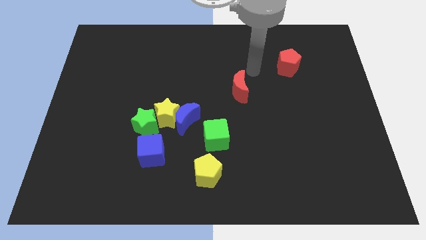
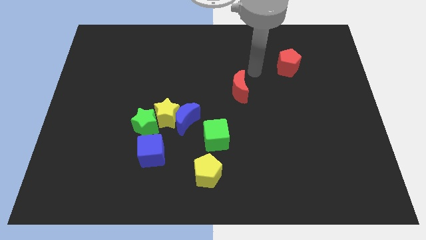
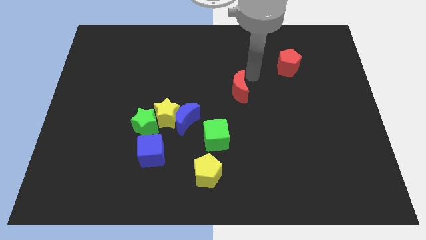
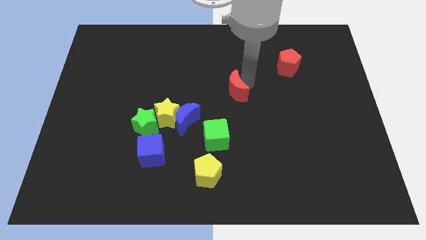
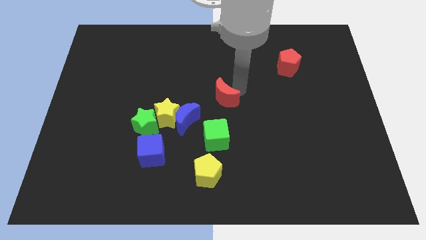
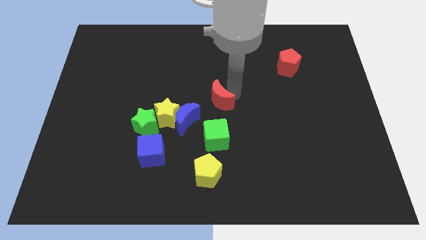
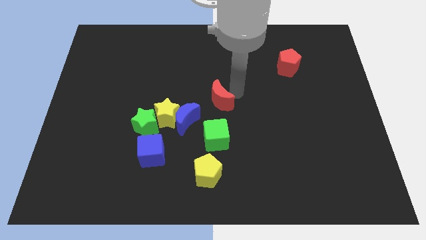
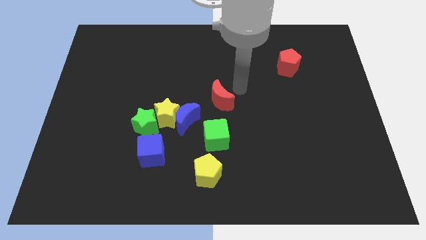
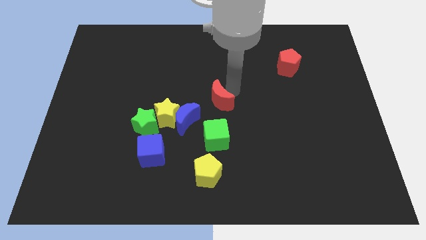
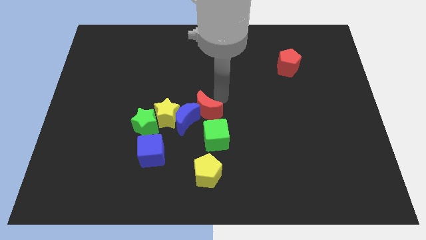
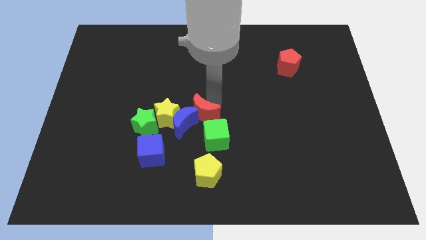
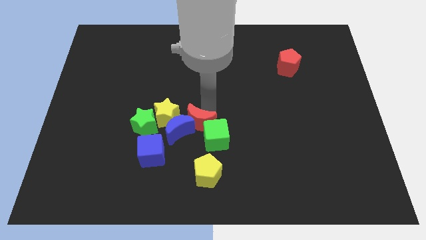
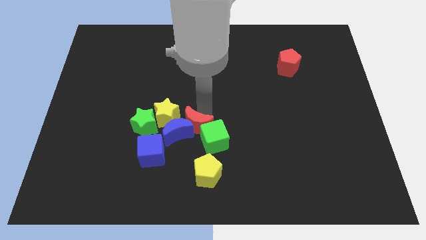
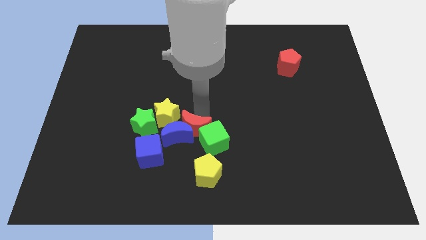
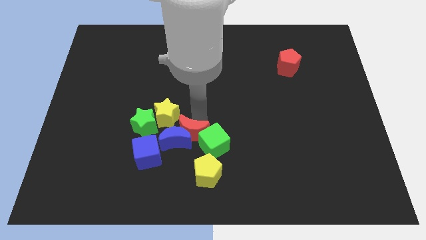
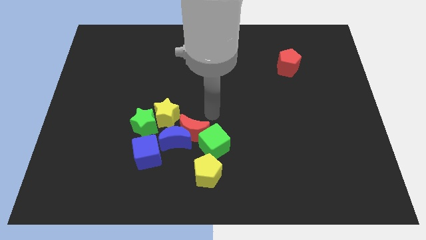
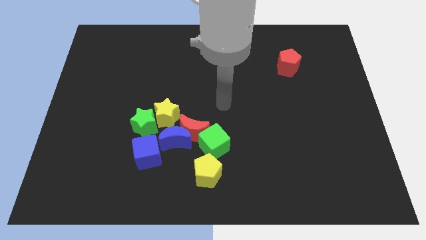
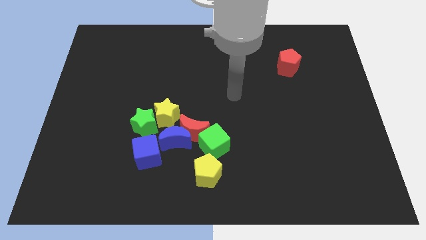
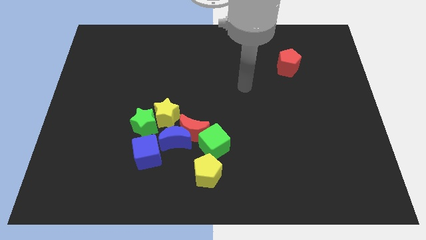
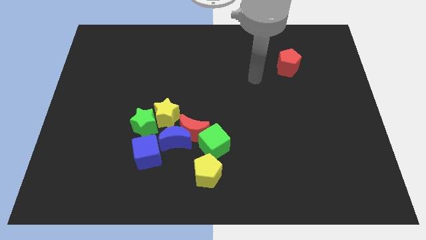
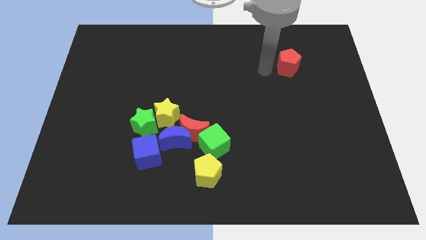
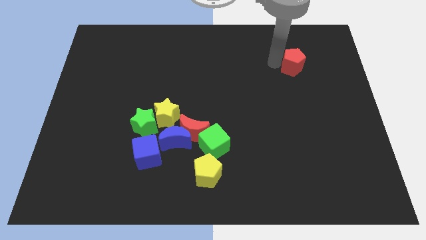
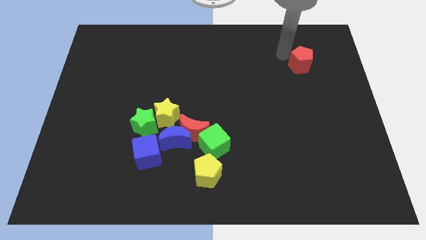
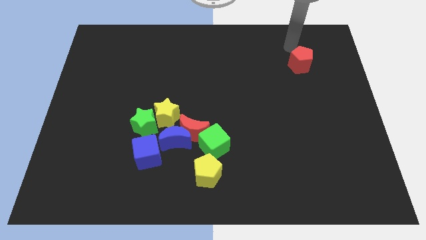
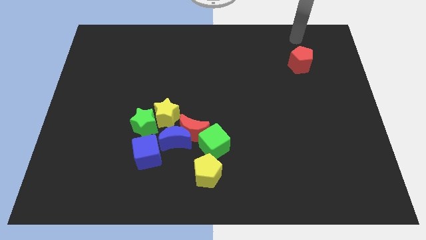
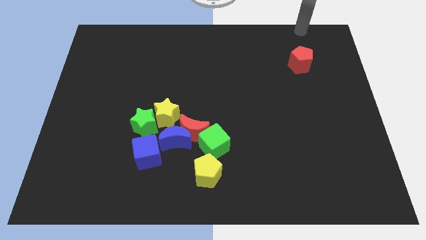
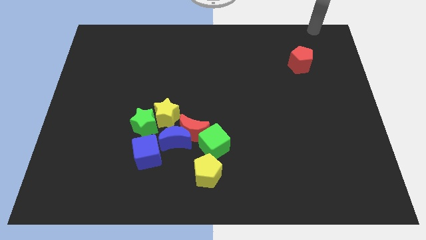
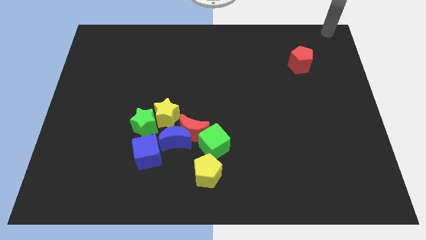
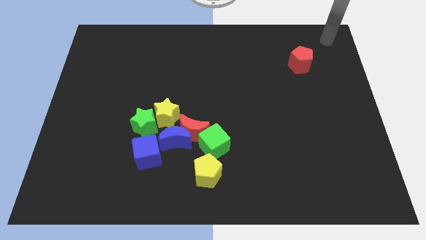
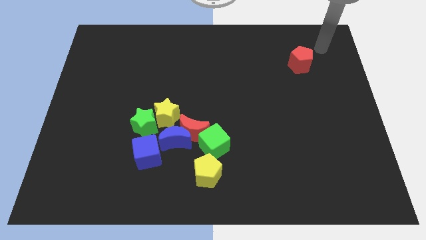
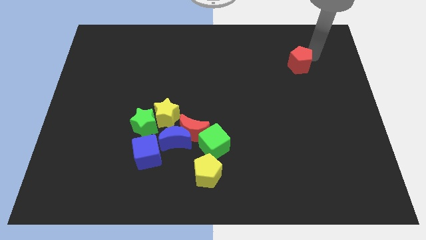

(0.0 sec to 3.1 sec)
move the arm diagonally to the red pentagon

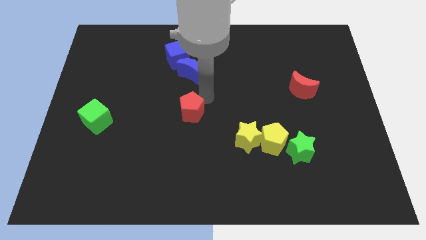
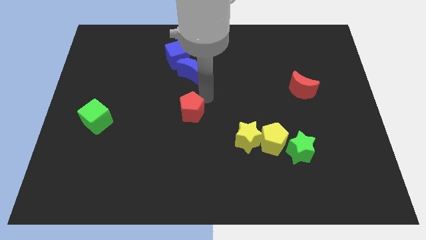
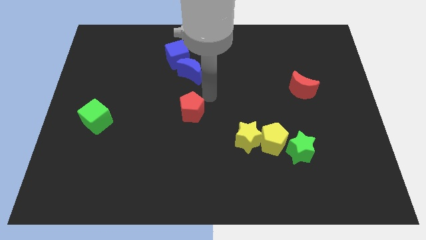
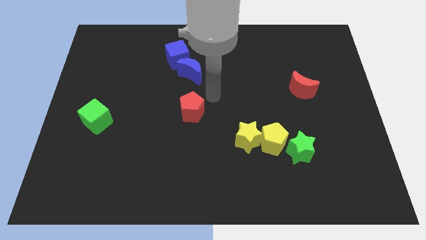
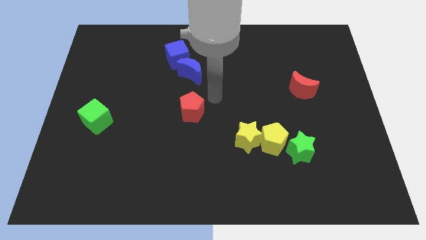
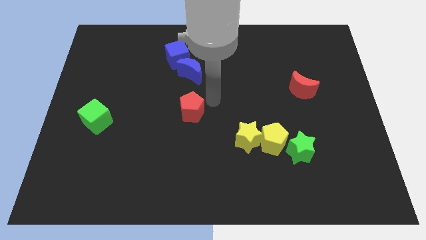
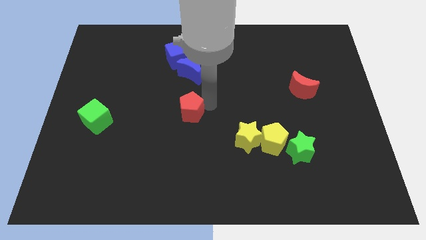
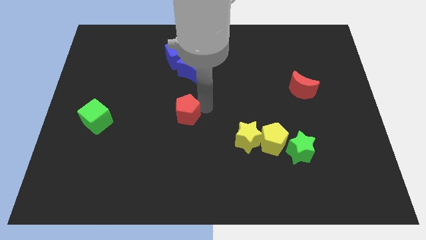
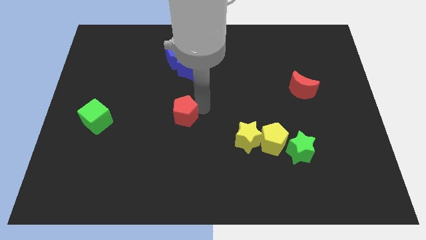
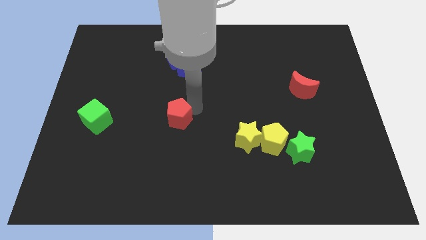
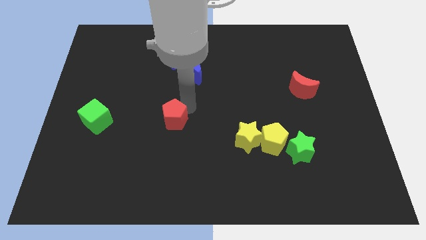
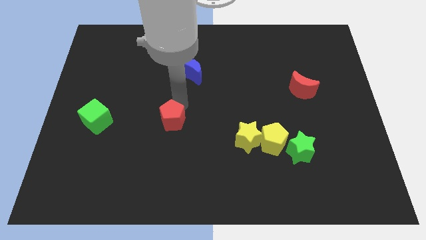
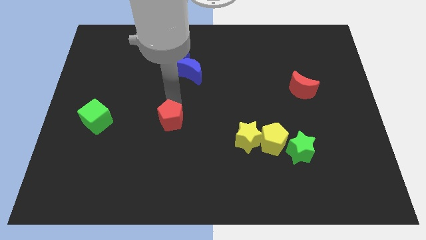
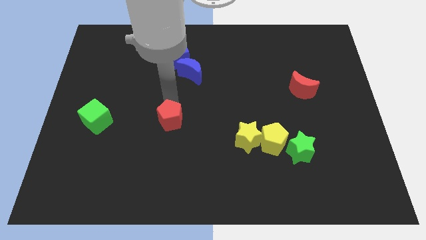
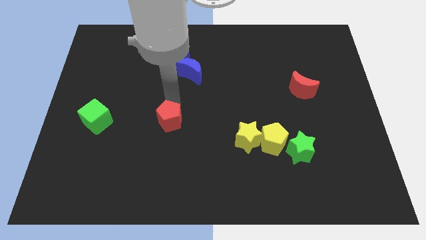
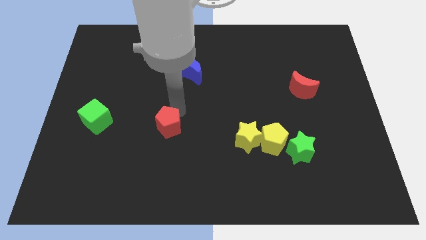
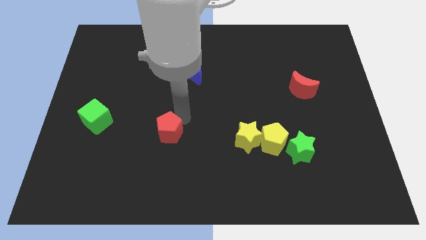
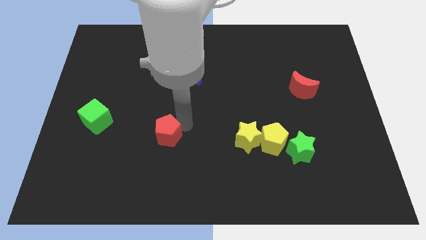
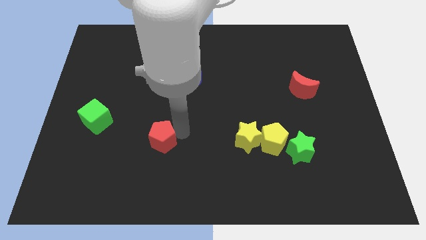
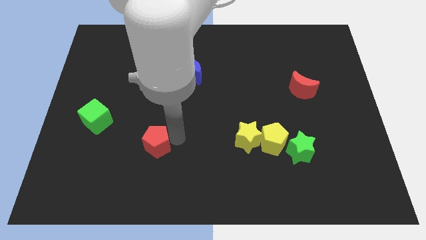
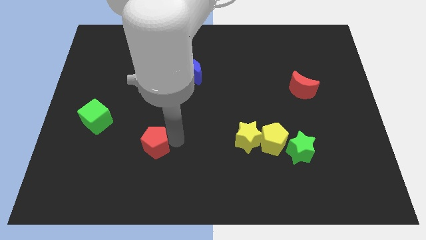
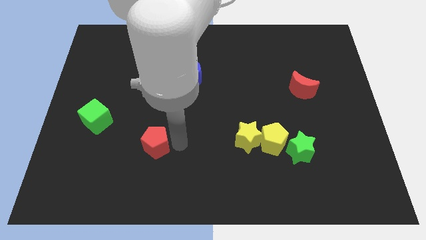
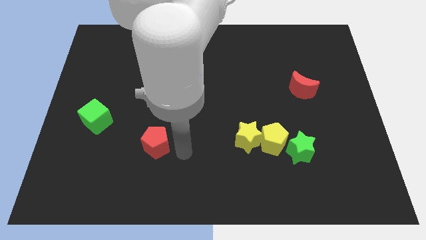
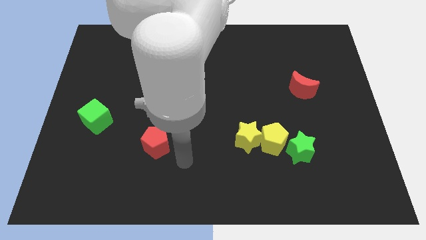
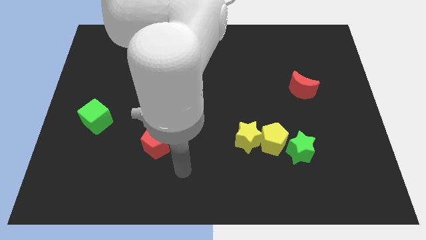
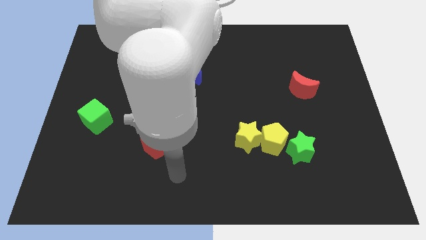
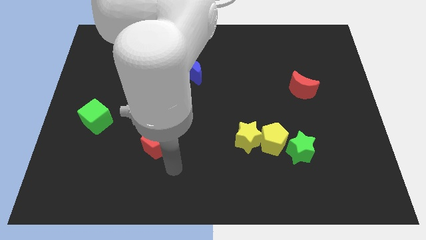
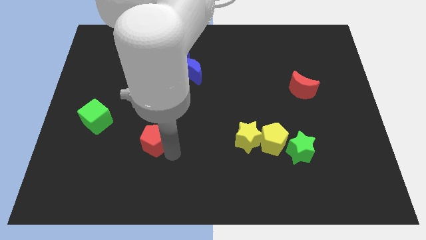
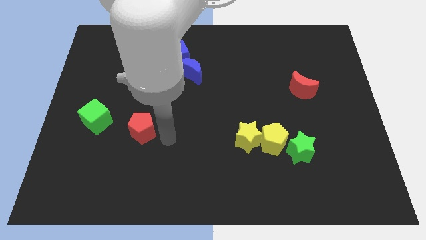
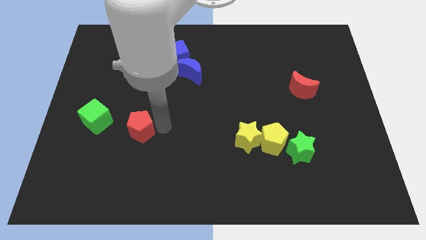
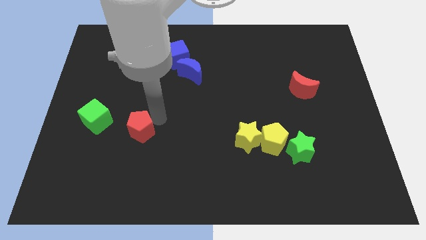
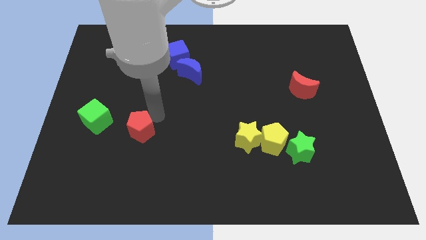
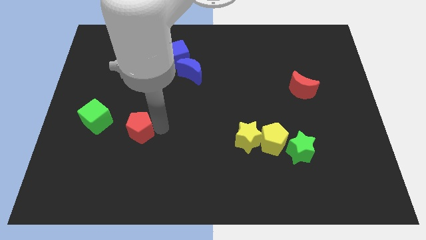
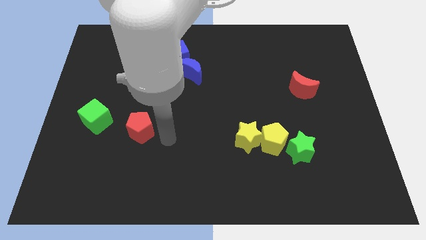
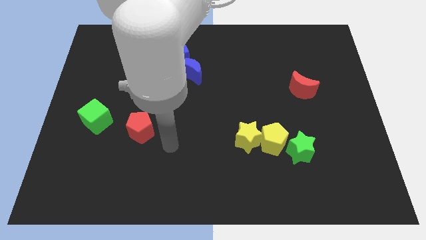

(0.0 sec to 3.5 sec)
move the red pentagon to the right of the green cube

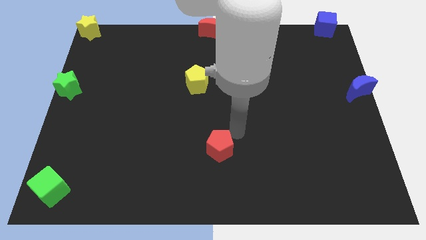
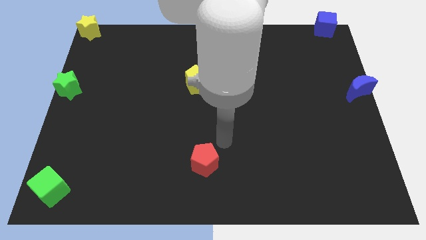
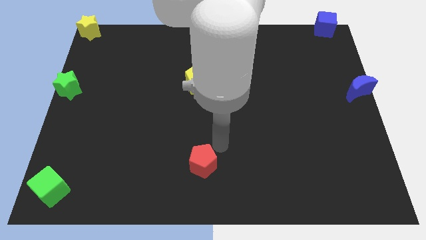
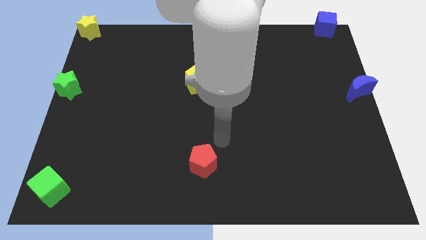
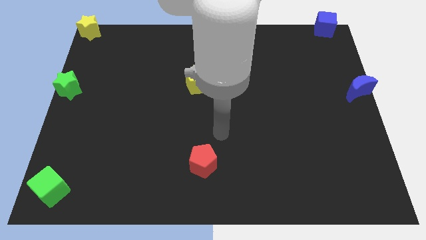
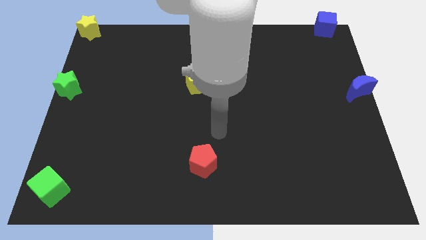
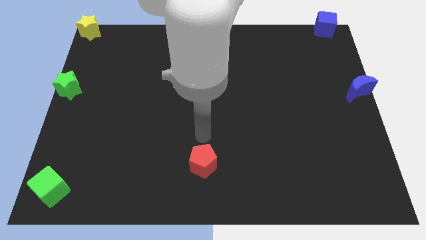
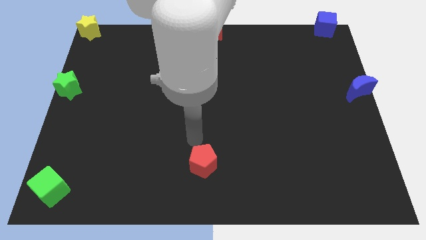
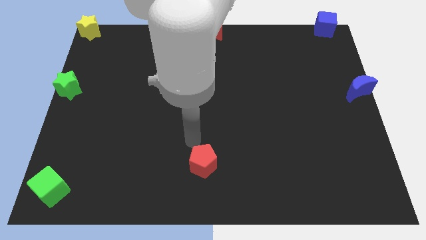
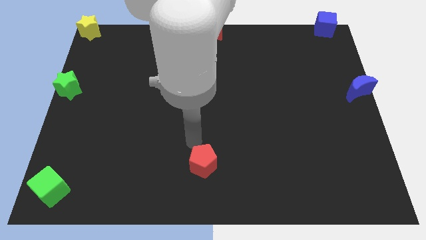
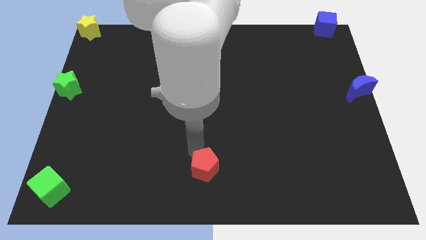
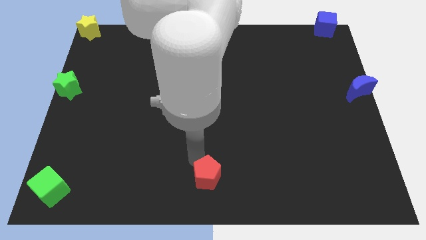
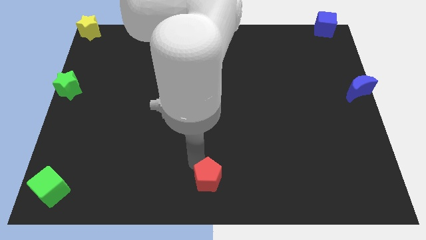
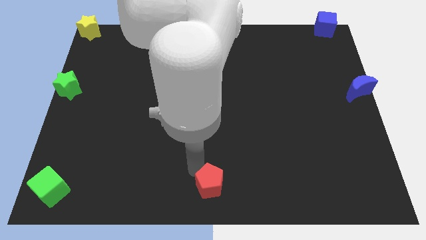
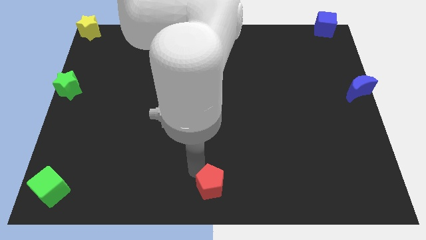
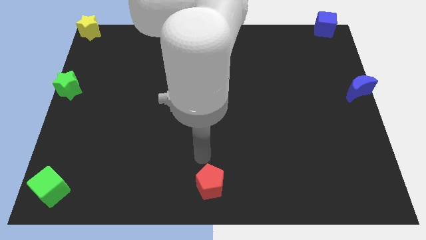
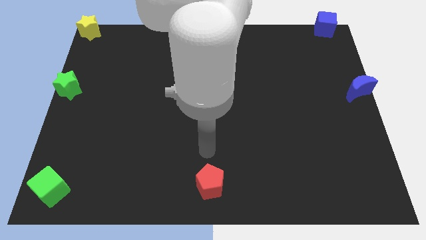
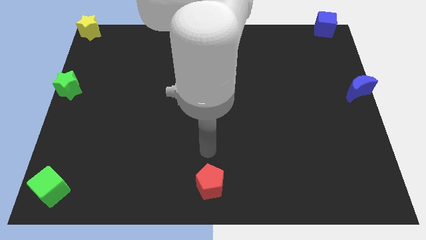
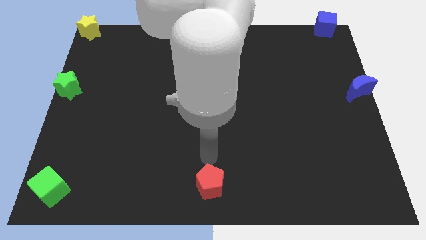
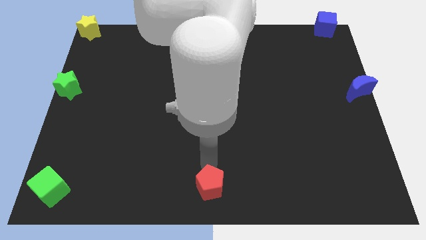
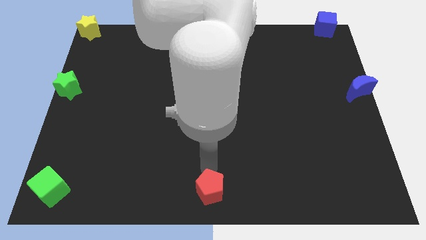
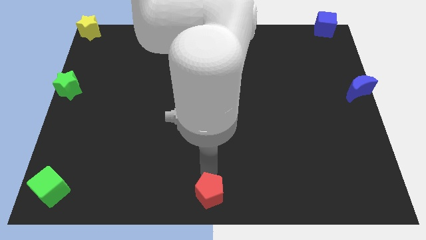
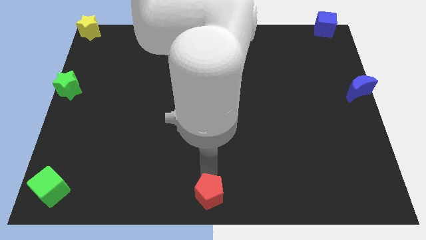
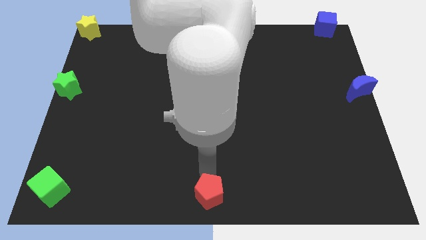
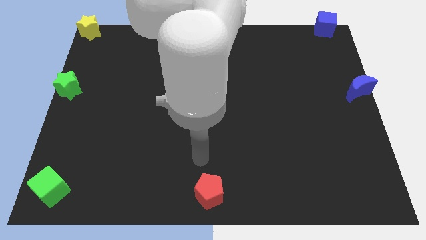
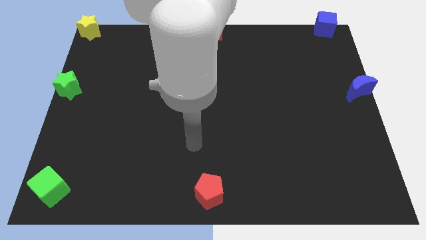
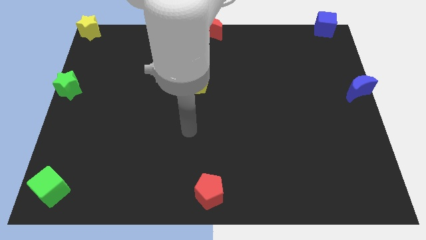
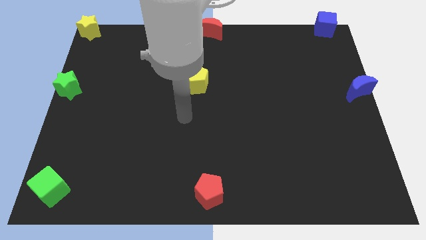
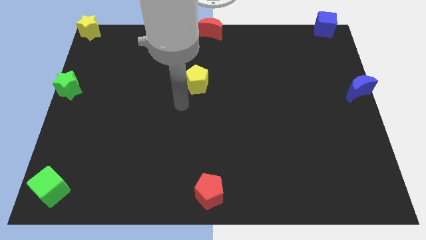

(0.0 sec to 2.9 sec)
push the red pentagon to the bottom middle of the board
